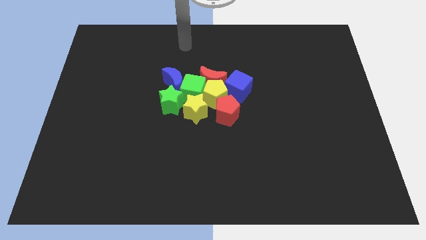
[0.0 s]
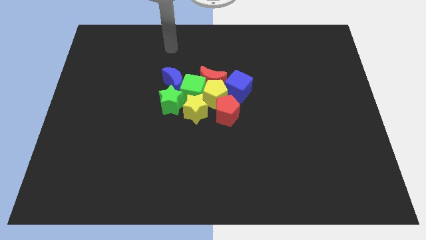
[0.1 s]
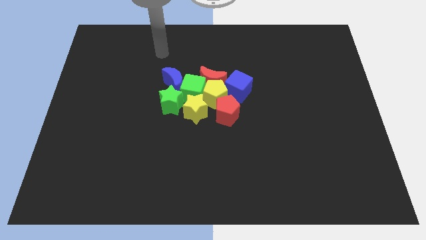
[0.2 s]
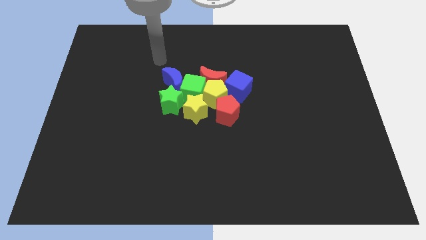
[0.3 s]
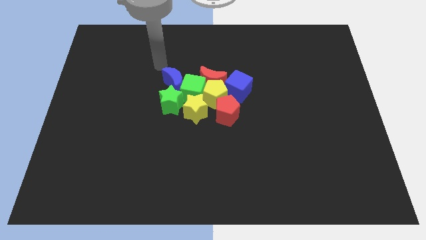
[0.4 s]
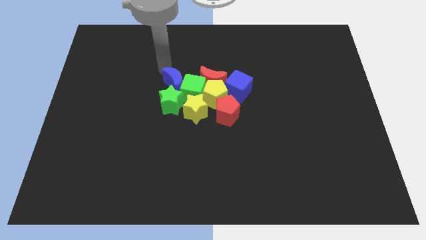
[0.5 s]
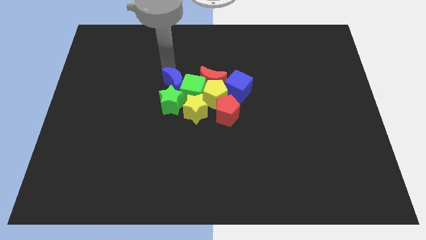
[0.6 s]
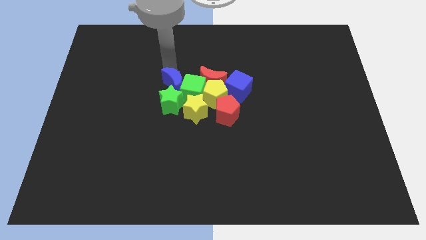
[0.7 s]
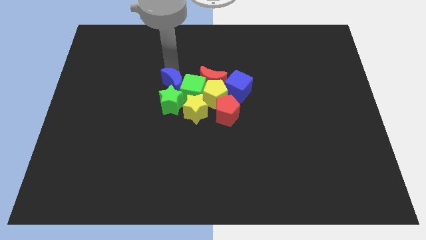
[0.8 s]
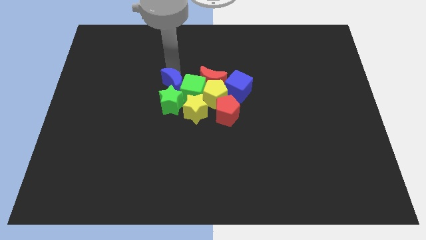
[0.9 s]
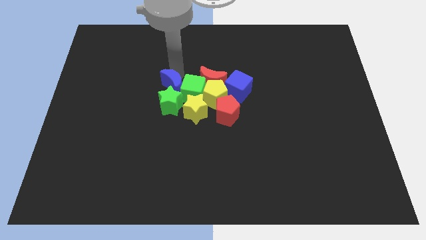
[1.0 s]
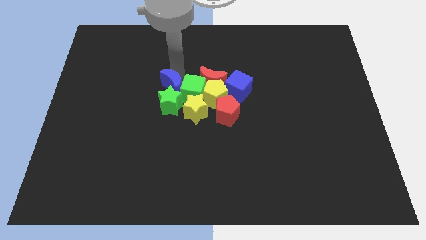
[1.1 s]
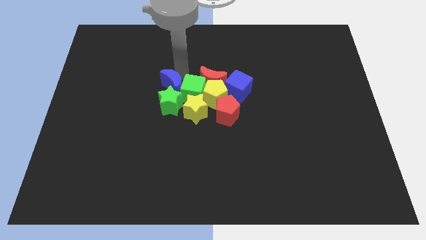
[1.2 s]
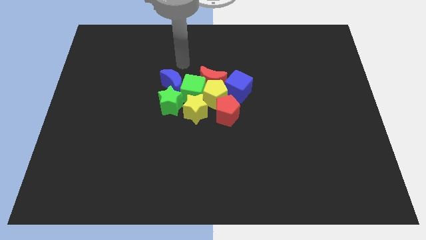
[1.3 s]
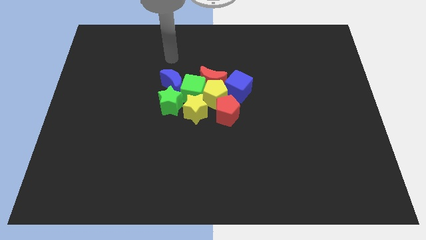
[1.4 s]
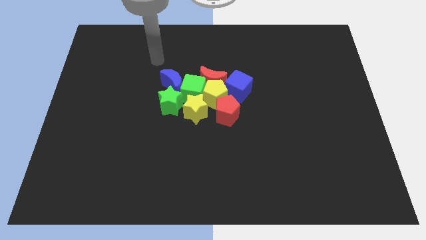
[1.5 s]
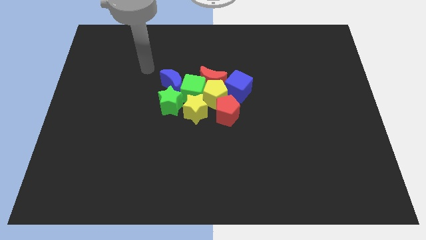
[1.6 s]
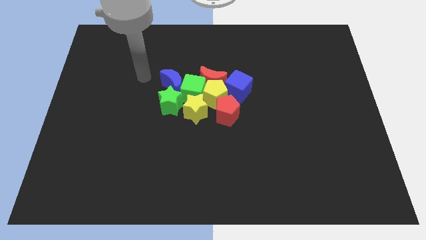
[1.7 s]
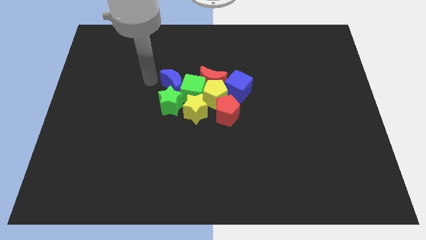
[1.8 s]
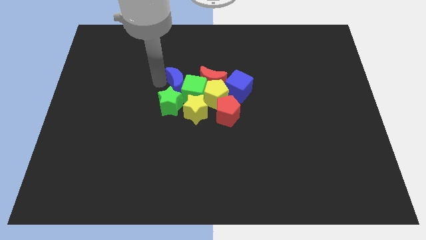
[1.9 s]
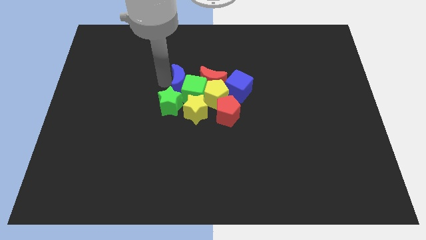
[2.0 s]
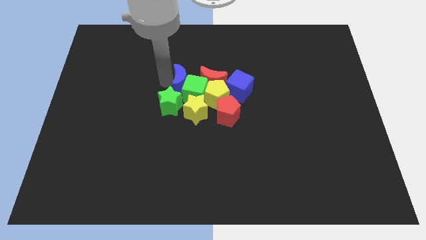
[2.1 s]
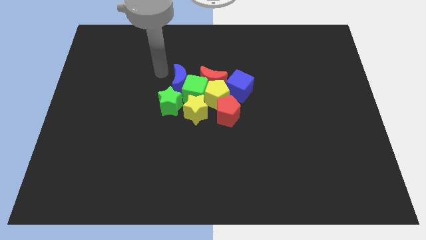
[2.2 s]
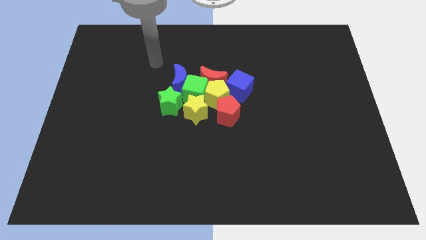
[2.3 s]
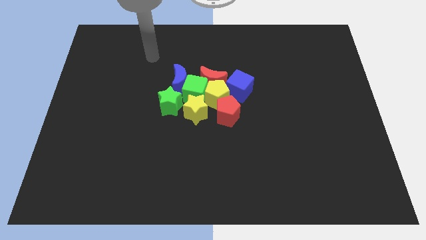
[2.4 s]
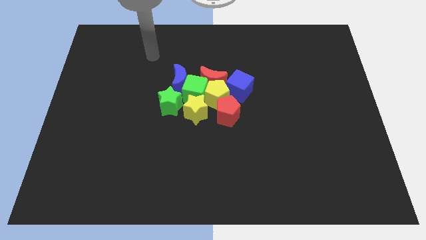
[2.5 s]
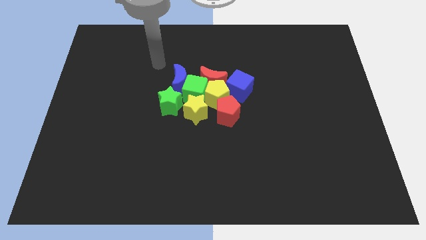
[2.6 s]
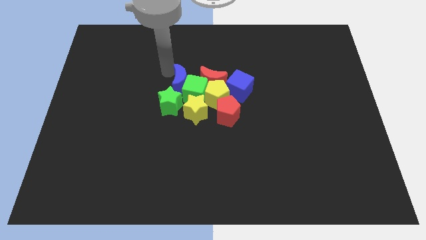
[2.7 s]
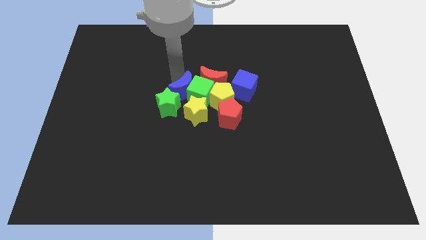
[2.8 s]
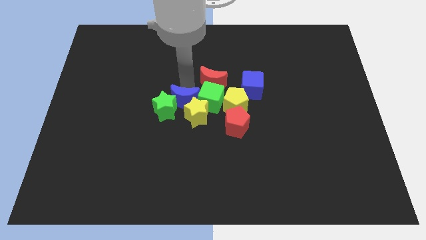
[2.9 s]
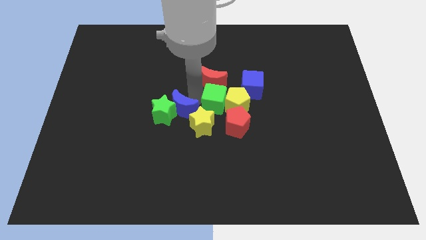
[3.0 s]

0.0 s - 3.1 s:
touch the left side of the green cube

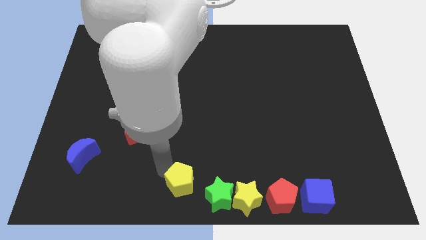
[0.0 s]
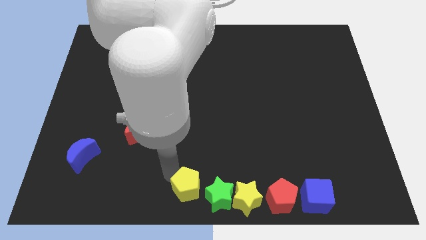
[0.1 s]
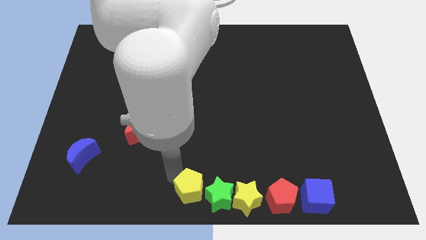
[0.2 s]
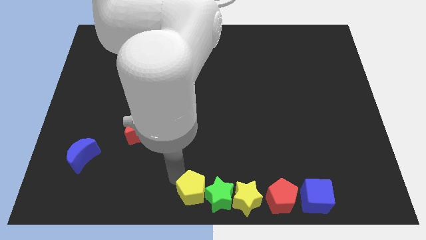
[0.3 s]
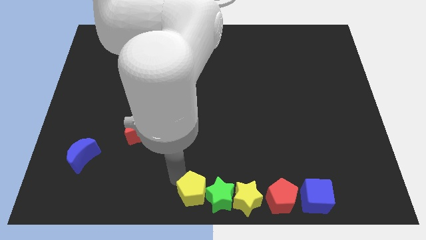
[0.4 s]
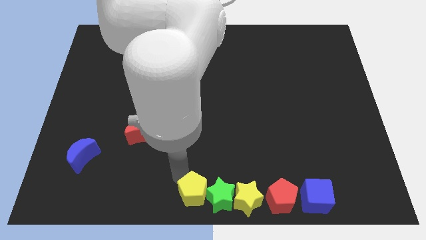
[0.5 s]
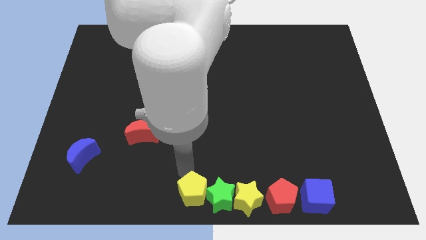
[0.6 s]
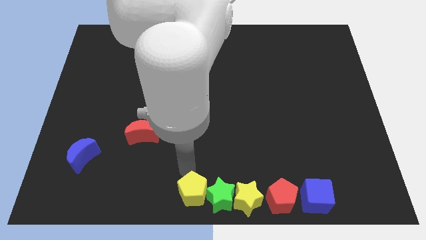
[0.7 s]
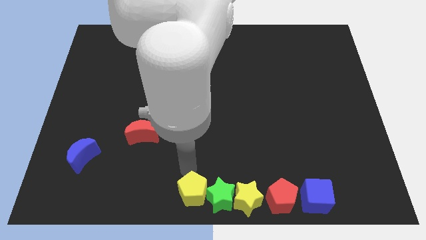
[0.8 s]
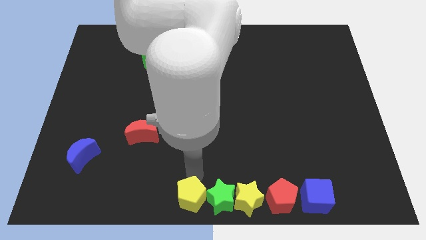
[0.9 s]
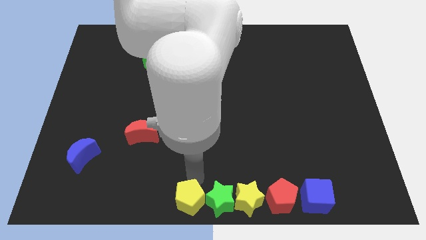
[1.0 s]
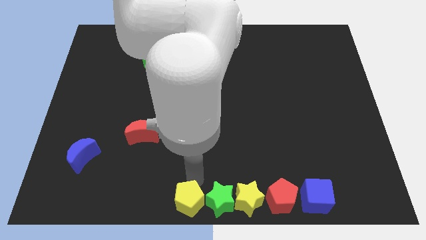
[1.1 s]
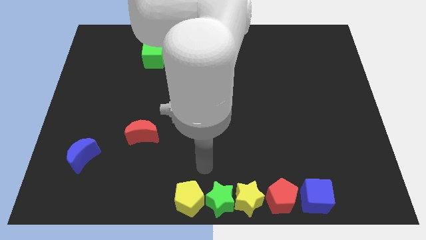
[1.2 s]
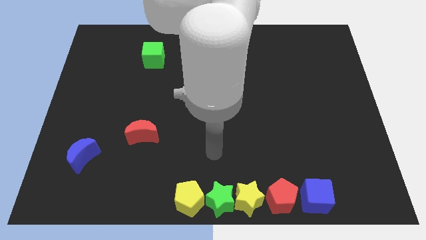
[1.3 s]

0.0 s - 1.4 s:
put the yellow pentagon left to the green star

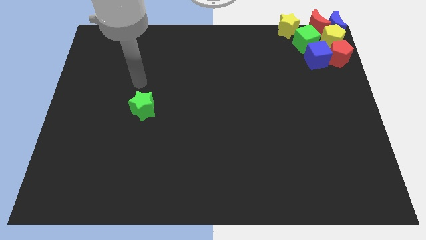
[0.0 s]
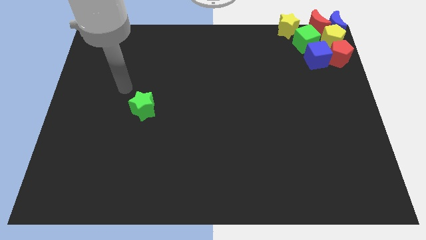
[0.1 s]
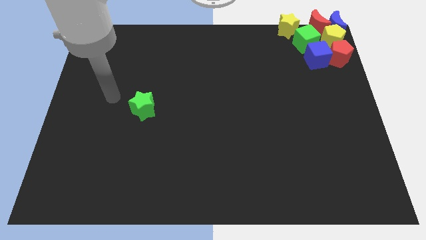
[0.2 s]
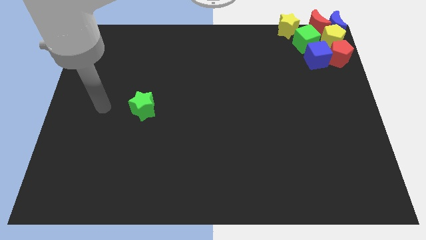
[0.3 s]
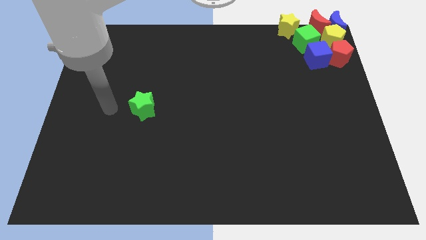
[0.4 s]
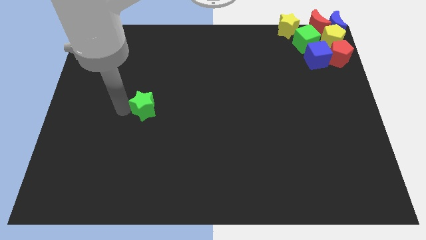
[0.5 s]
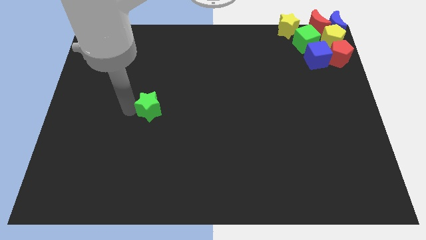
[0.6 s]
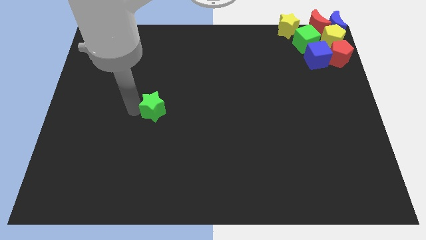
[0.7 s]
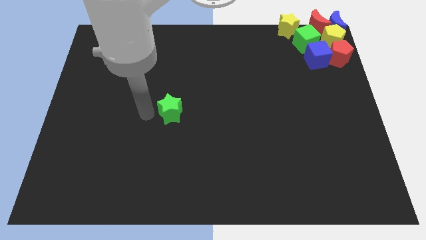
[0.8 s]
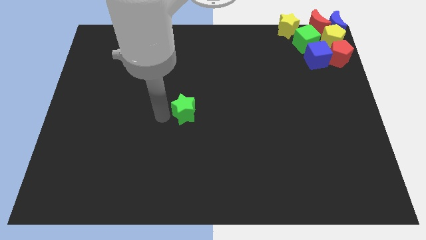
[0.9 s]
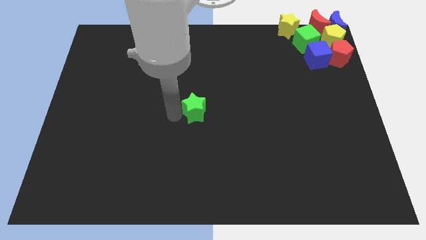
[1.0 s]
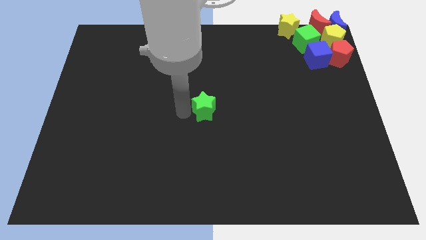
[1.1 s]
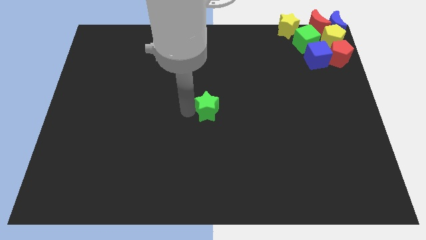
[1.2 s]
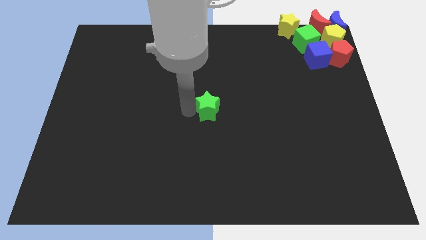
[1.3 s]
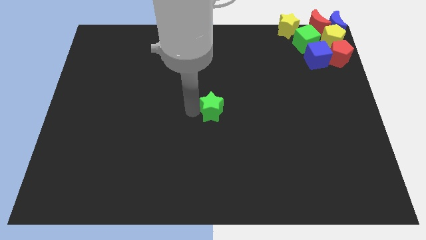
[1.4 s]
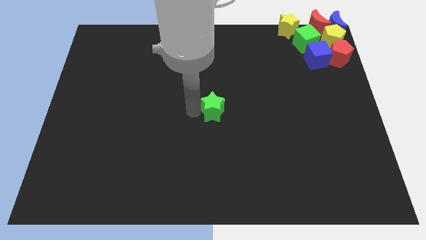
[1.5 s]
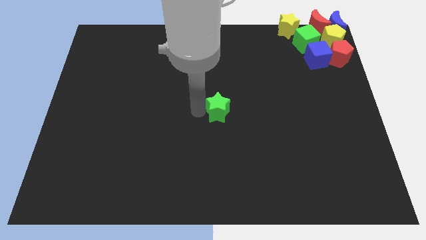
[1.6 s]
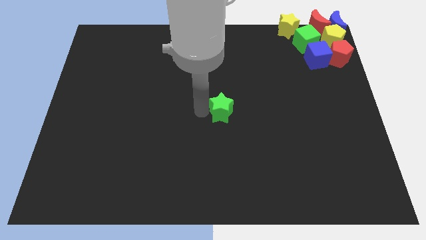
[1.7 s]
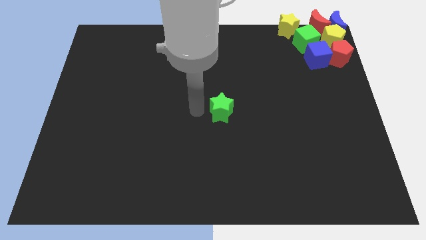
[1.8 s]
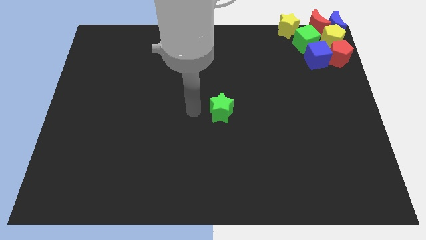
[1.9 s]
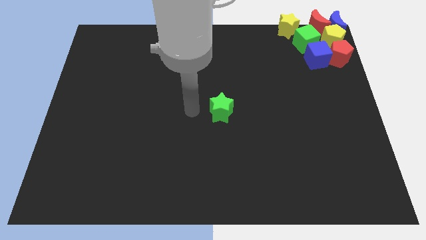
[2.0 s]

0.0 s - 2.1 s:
push the green star slightly towards the right

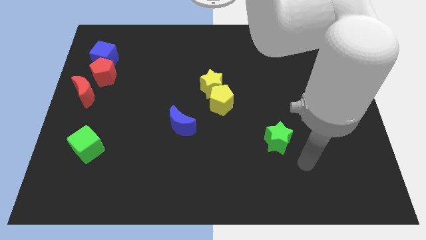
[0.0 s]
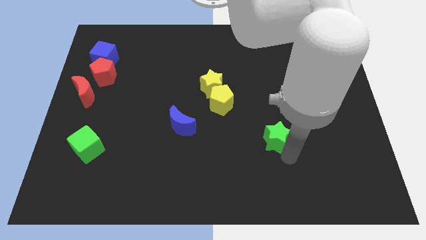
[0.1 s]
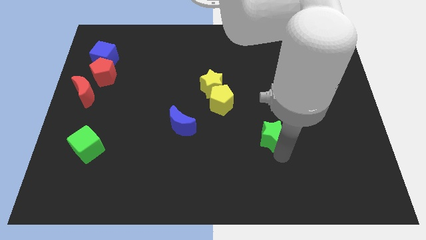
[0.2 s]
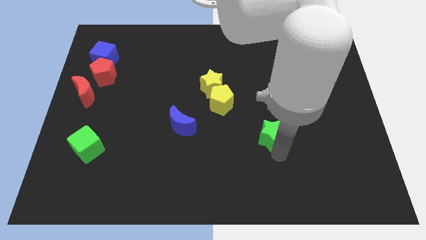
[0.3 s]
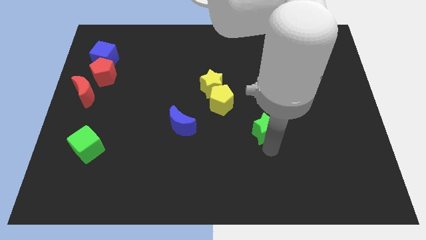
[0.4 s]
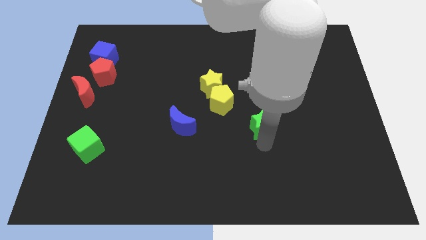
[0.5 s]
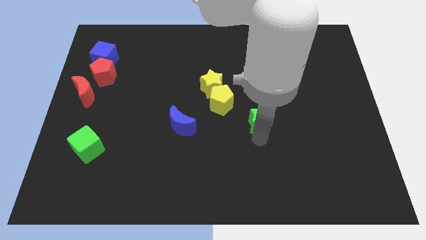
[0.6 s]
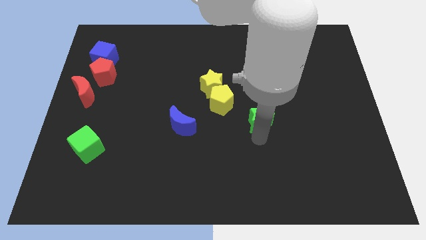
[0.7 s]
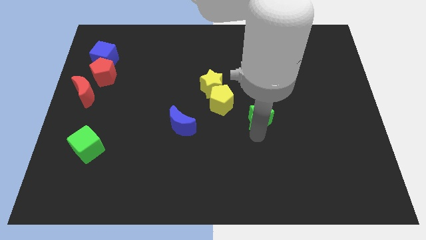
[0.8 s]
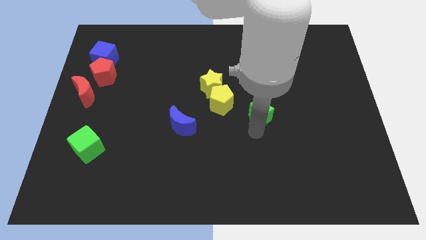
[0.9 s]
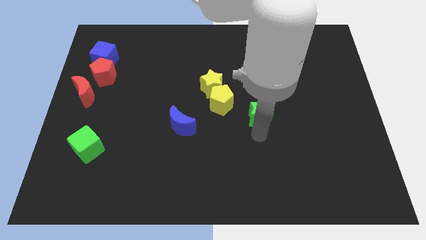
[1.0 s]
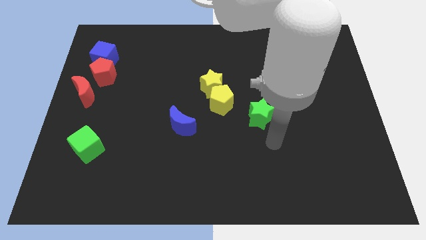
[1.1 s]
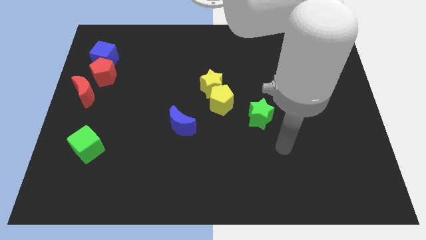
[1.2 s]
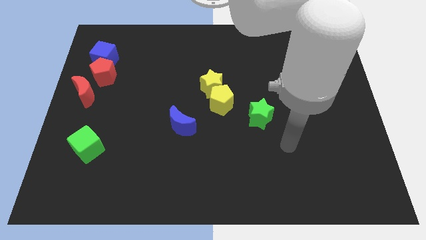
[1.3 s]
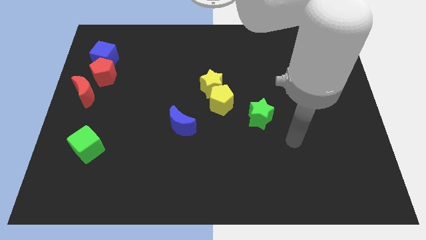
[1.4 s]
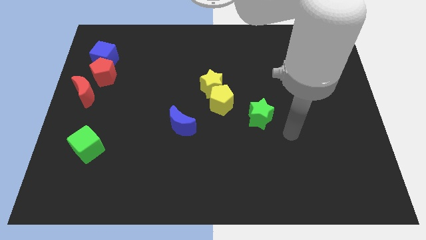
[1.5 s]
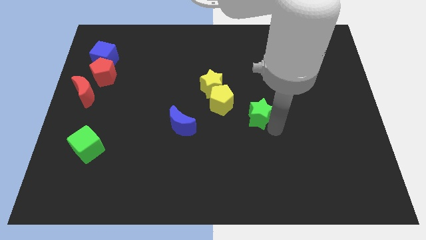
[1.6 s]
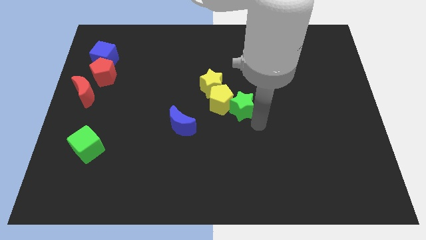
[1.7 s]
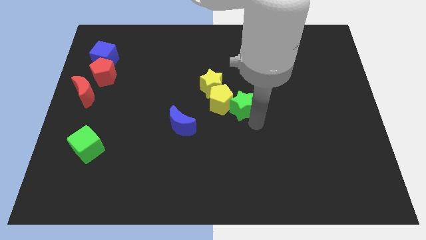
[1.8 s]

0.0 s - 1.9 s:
push the green star into the bottom right side of the yellow pentagon

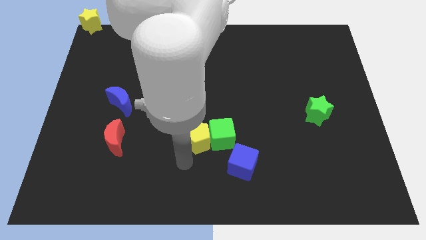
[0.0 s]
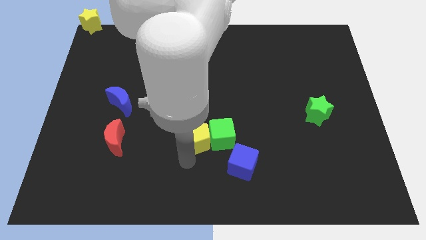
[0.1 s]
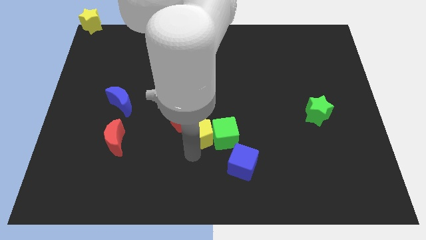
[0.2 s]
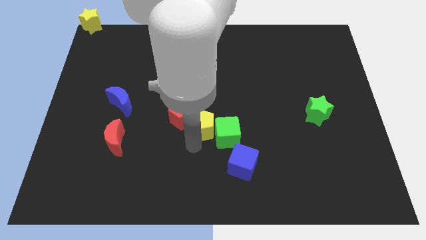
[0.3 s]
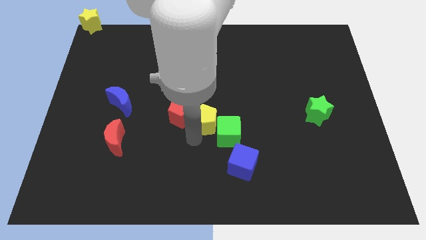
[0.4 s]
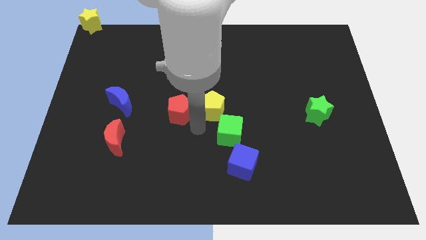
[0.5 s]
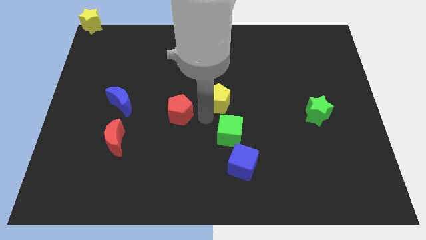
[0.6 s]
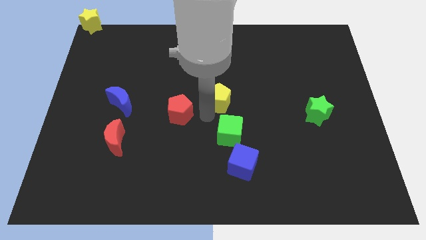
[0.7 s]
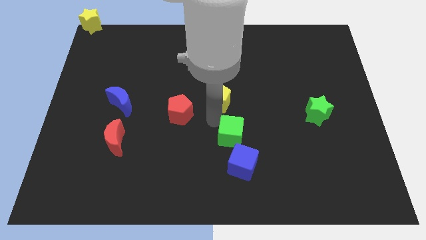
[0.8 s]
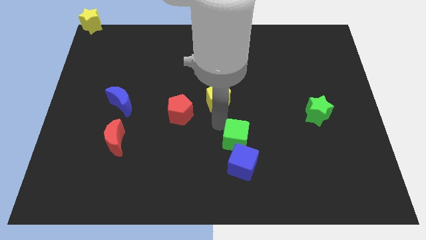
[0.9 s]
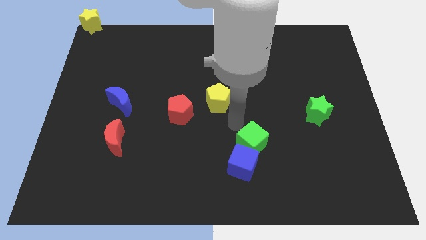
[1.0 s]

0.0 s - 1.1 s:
separate green cube and yellow pentagon
